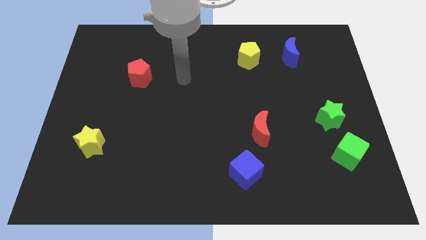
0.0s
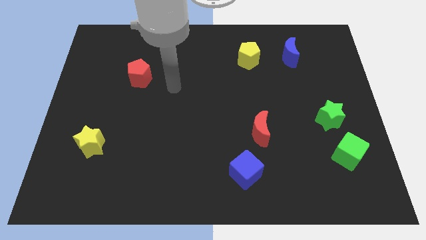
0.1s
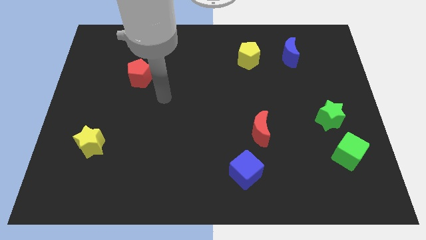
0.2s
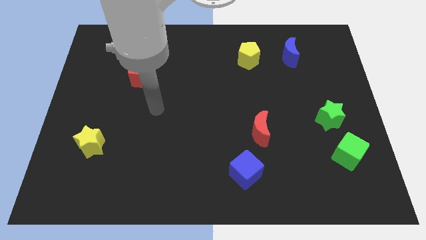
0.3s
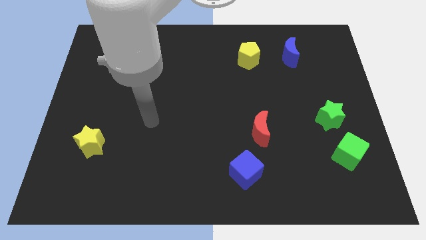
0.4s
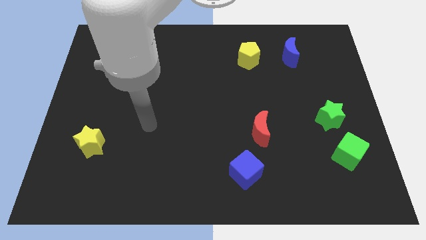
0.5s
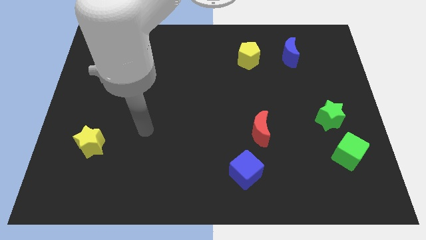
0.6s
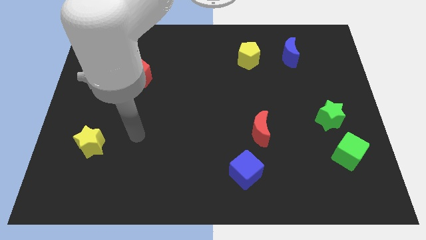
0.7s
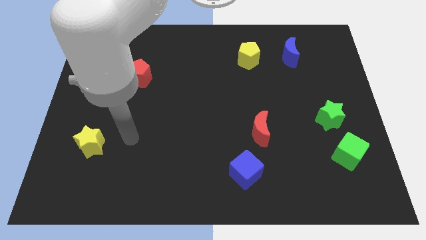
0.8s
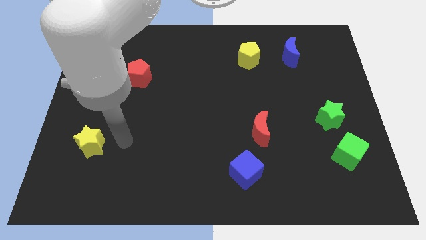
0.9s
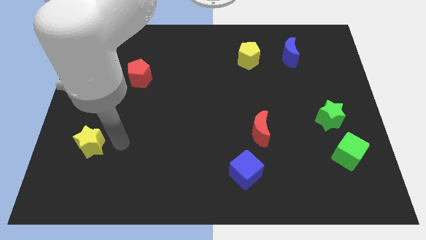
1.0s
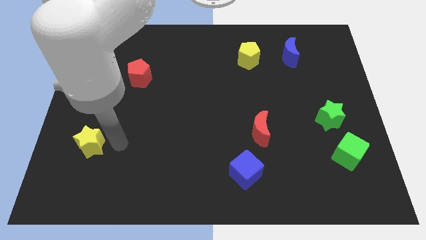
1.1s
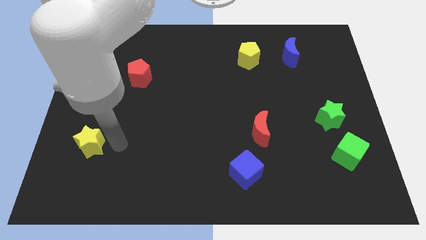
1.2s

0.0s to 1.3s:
go and point your hand at the right side of the yellow star

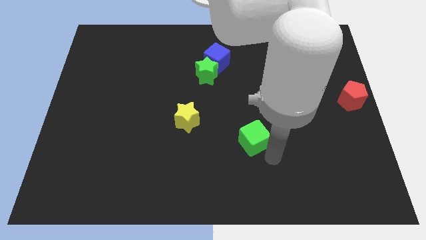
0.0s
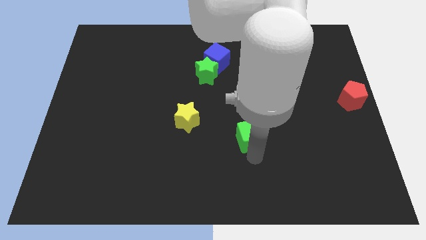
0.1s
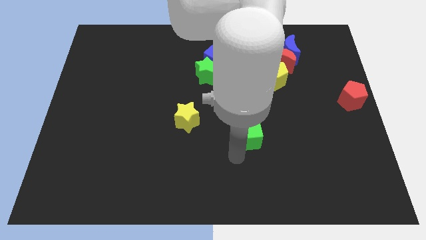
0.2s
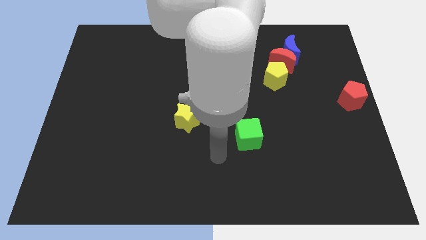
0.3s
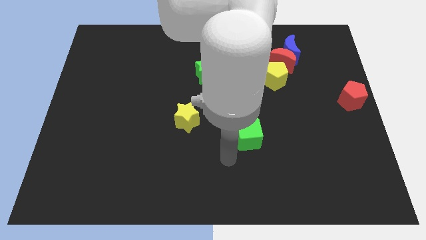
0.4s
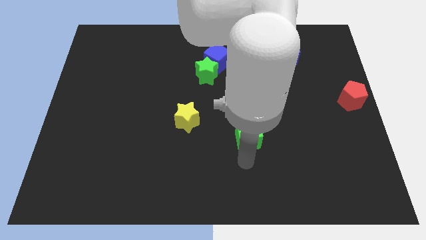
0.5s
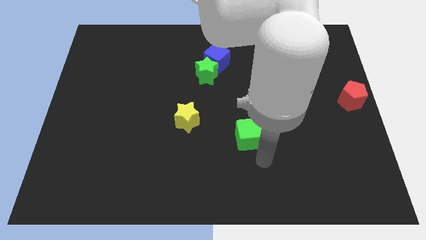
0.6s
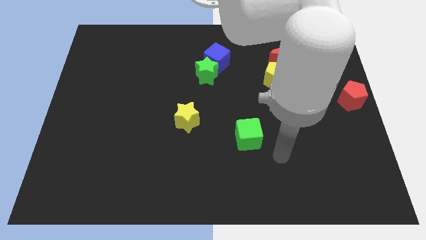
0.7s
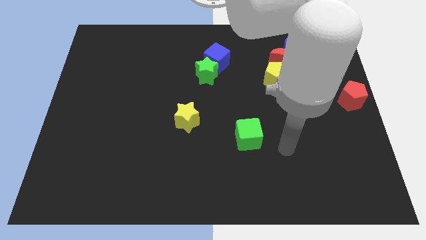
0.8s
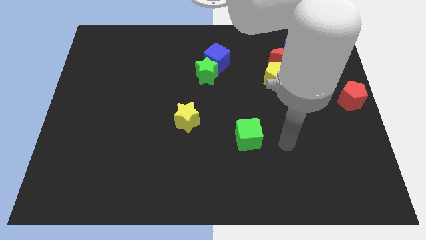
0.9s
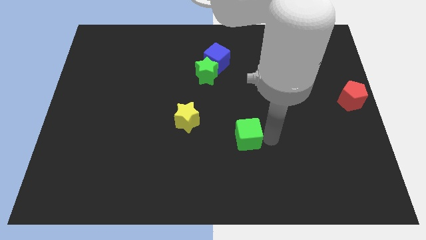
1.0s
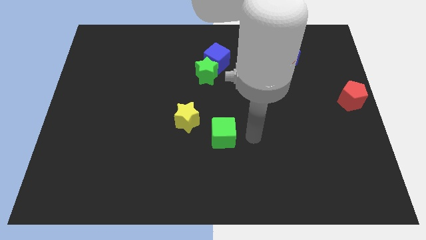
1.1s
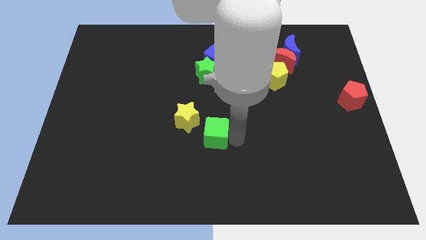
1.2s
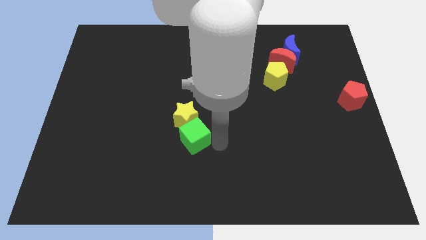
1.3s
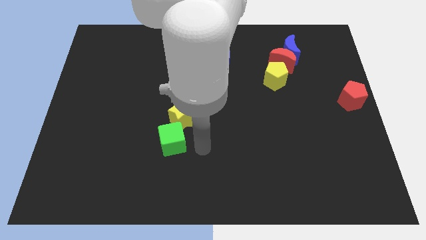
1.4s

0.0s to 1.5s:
place the green cube below the yellow star

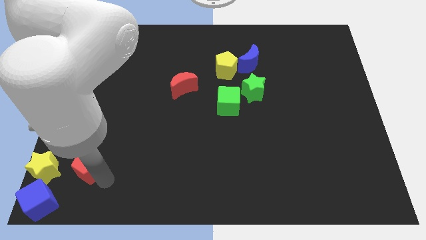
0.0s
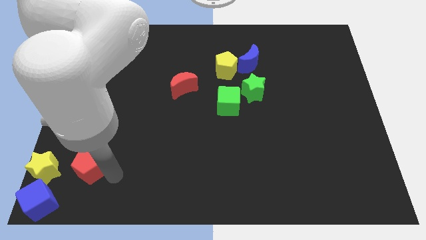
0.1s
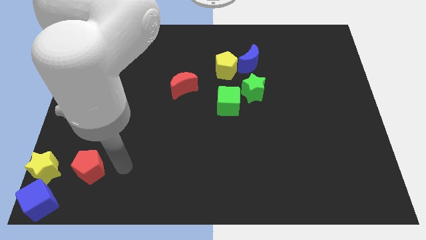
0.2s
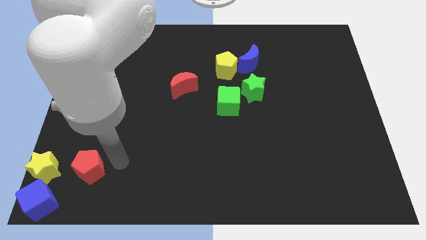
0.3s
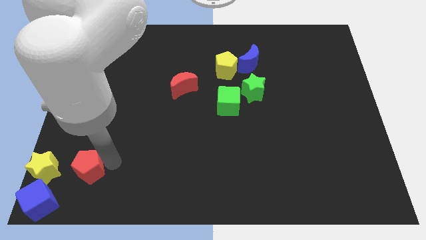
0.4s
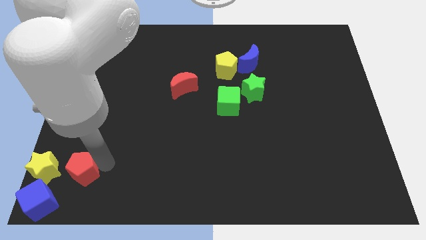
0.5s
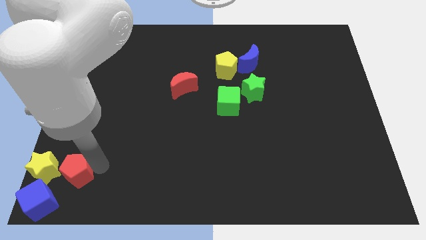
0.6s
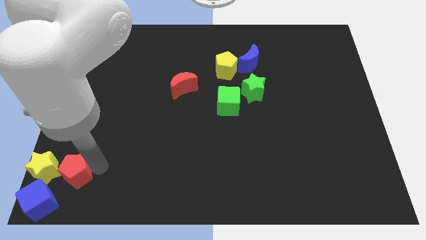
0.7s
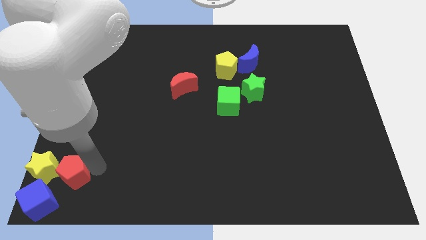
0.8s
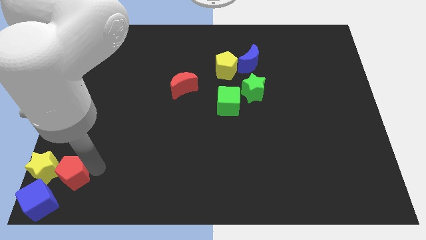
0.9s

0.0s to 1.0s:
push red pentagon adjacent to yellow star

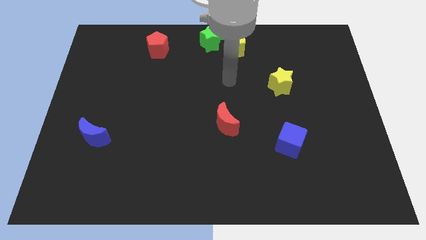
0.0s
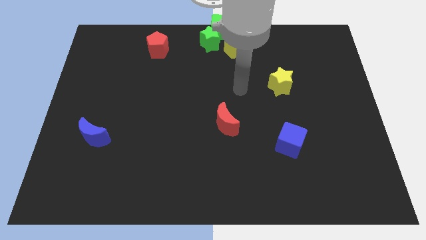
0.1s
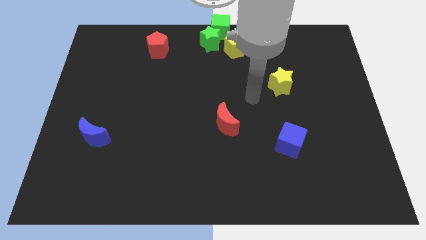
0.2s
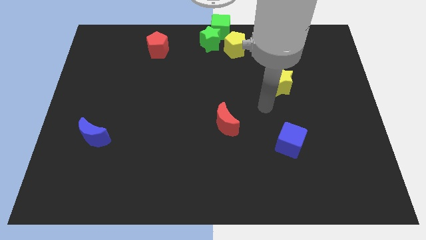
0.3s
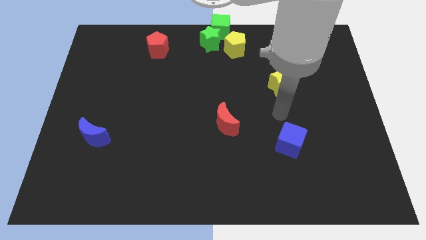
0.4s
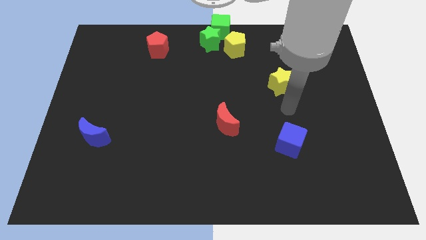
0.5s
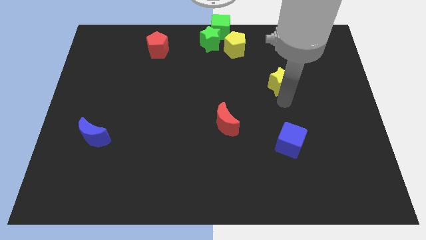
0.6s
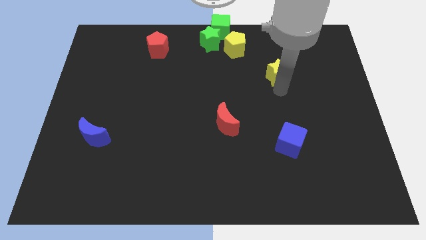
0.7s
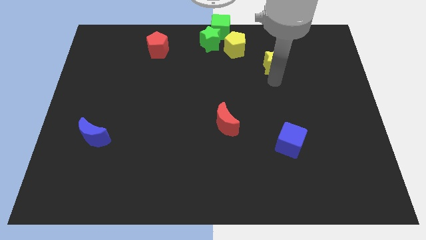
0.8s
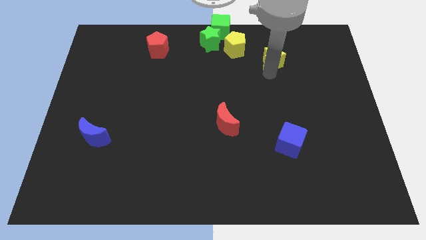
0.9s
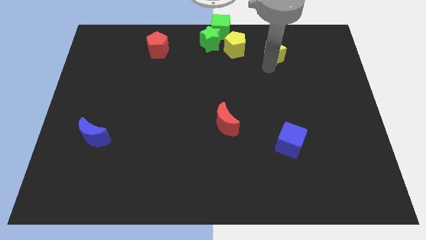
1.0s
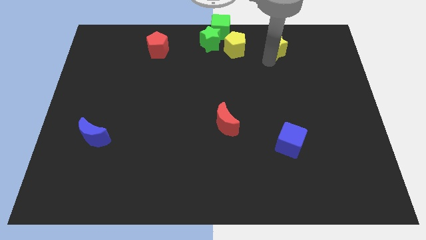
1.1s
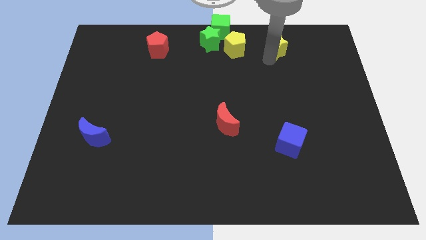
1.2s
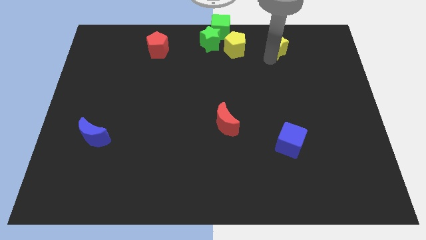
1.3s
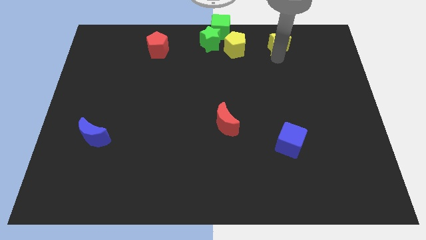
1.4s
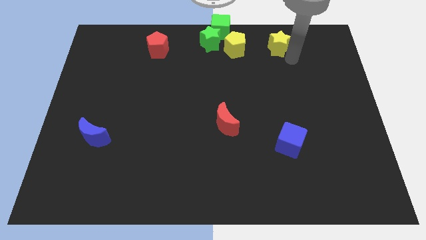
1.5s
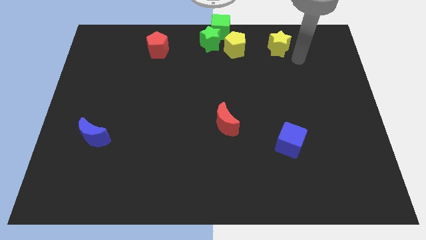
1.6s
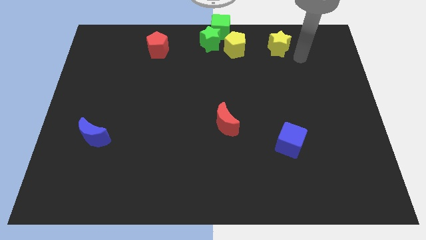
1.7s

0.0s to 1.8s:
move the yellow star towards right side of the yellow pentagon

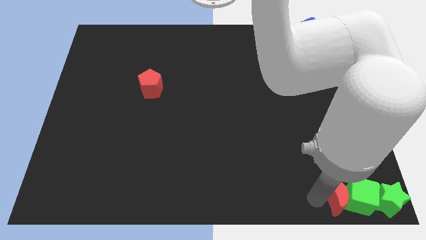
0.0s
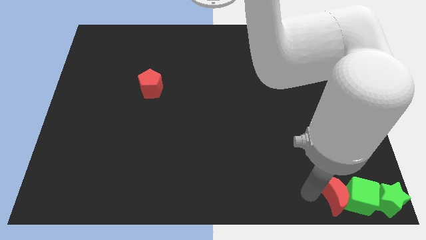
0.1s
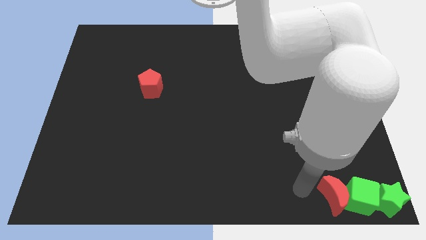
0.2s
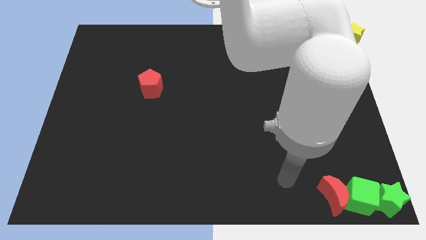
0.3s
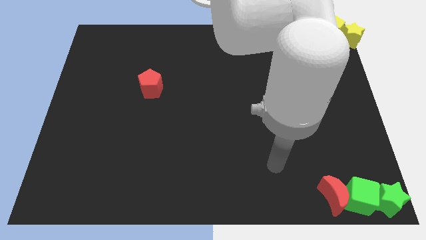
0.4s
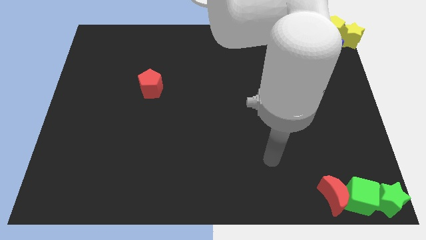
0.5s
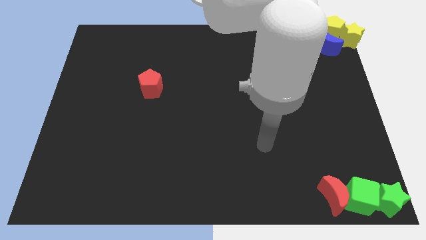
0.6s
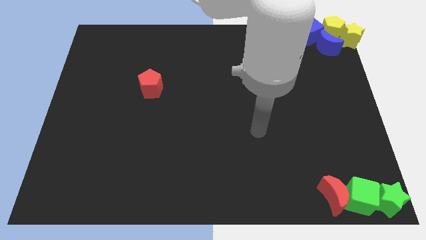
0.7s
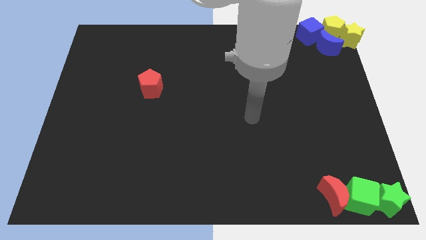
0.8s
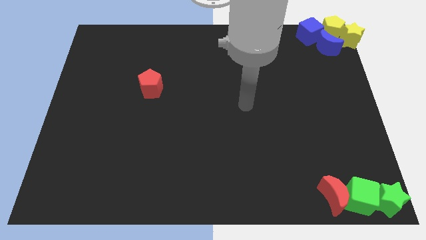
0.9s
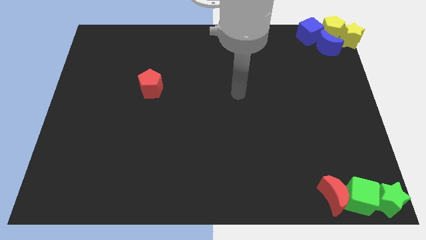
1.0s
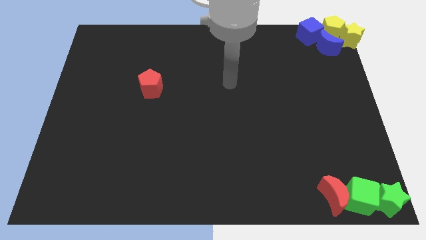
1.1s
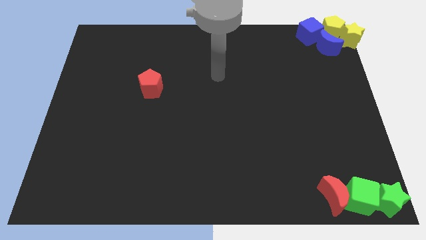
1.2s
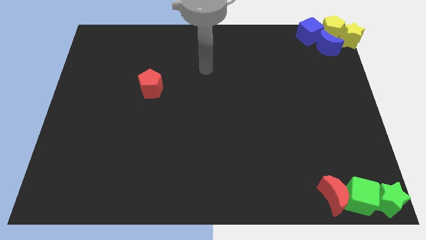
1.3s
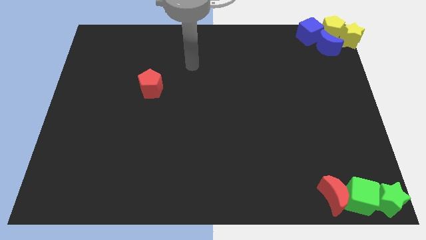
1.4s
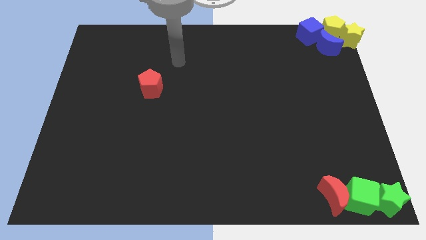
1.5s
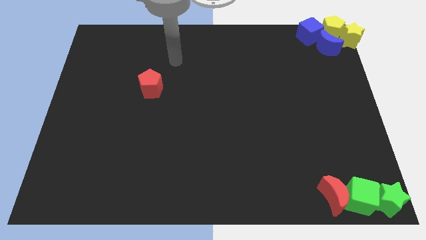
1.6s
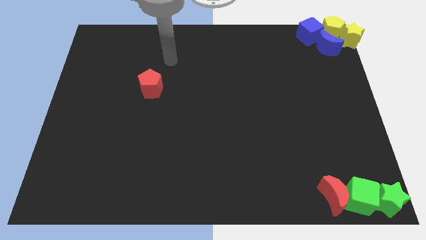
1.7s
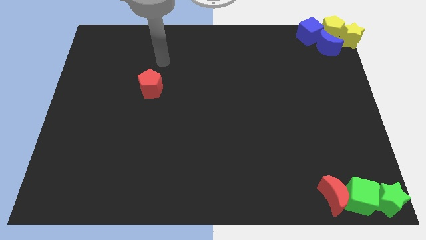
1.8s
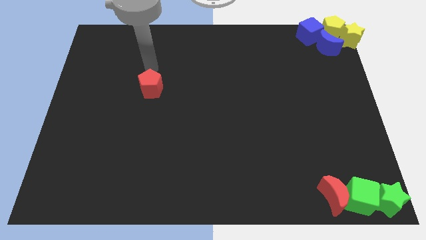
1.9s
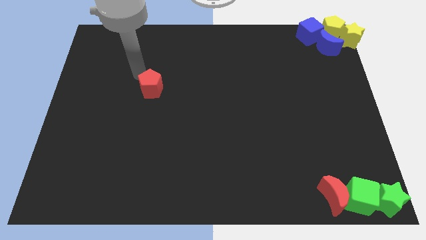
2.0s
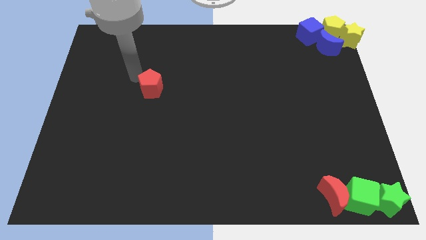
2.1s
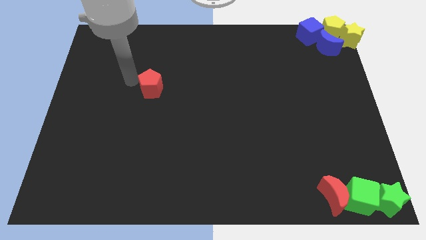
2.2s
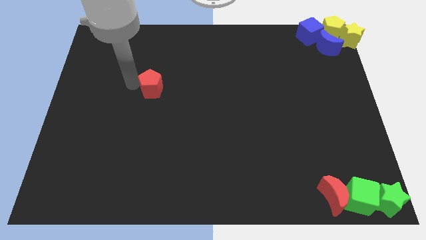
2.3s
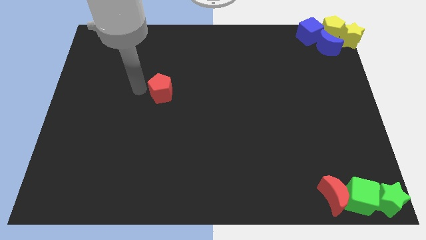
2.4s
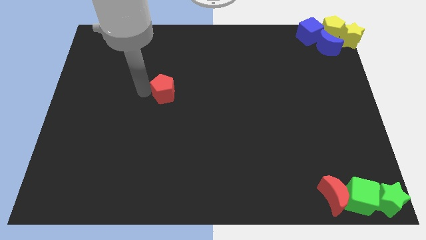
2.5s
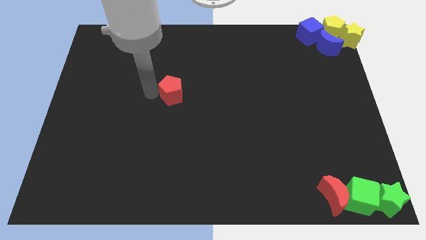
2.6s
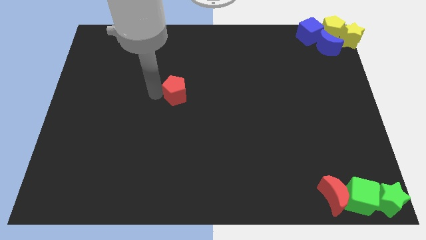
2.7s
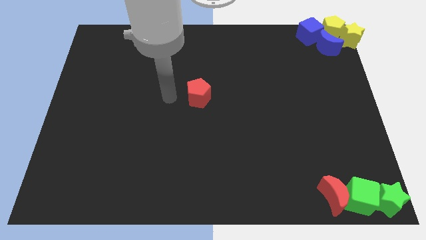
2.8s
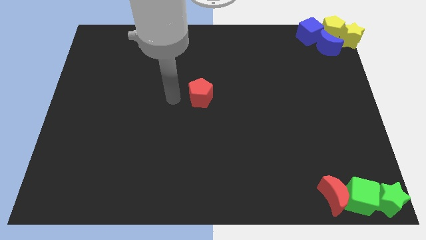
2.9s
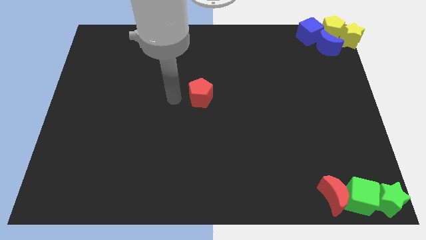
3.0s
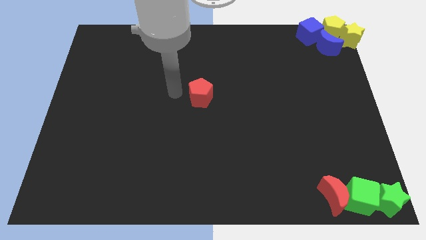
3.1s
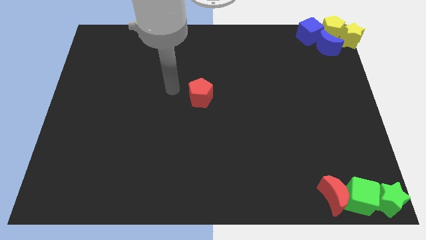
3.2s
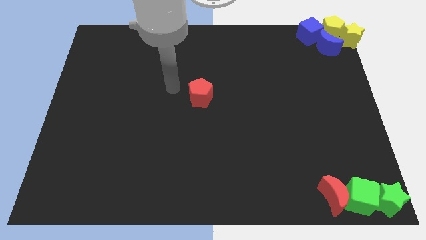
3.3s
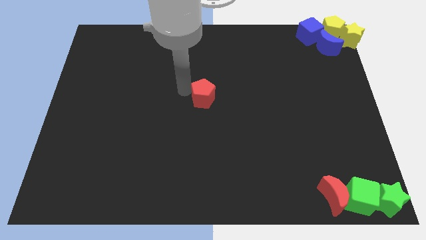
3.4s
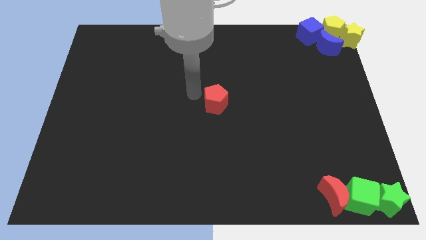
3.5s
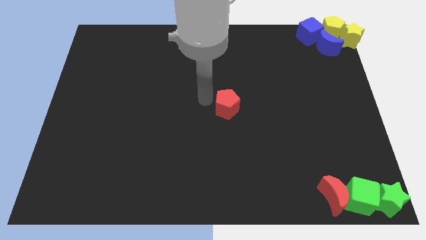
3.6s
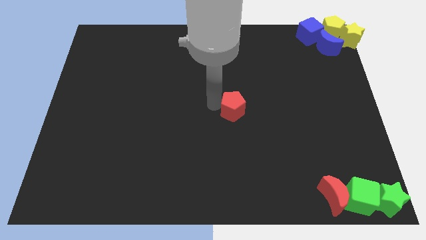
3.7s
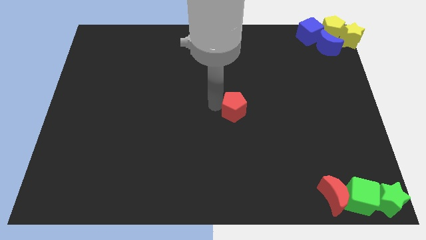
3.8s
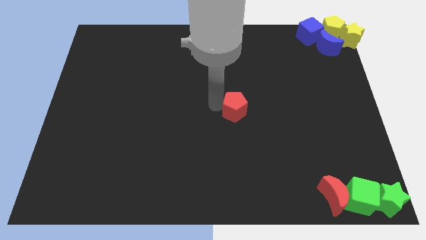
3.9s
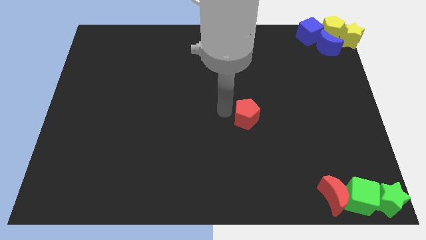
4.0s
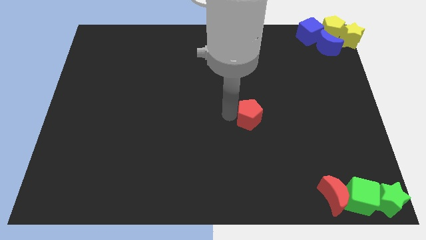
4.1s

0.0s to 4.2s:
push the red pentagon towards the horizontal line
